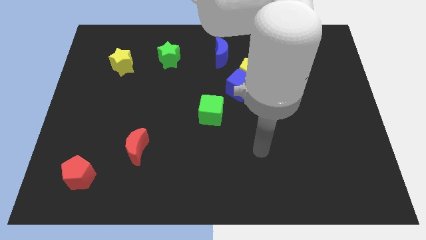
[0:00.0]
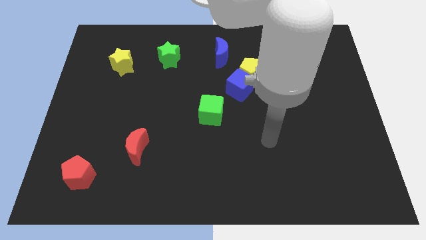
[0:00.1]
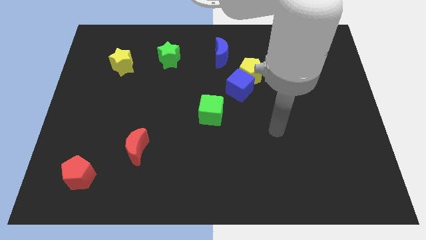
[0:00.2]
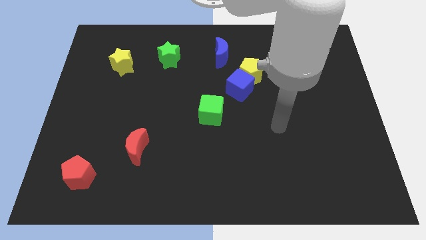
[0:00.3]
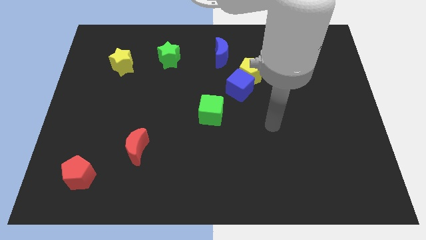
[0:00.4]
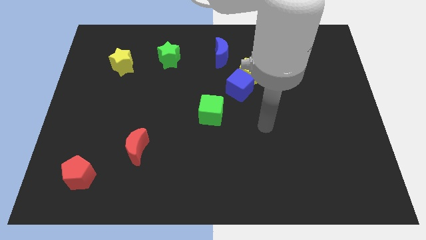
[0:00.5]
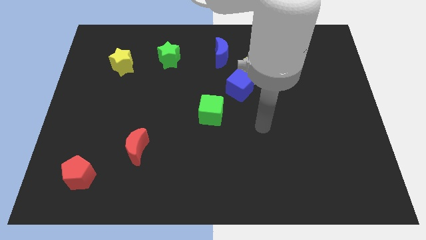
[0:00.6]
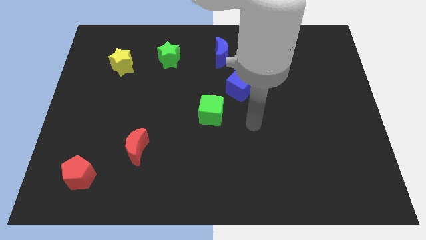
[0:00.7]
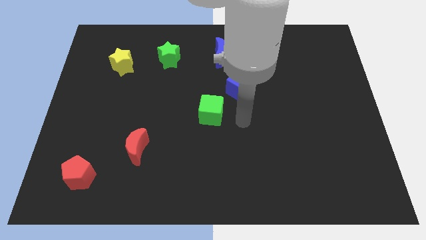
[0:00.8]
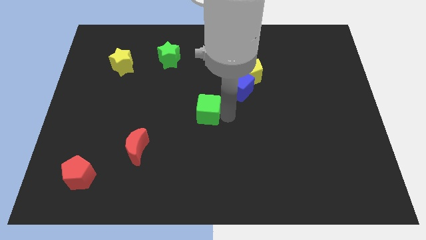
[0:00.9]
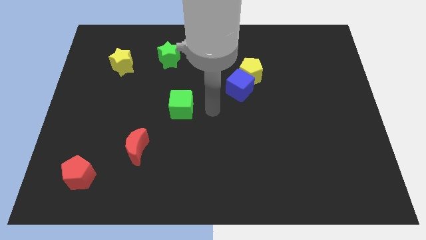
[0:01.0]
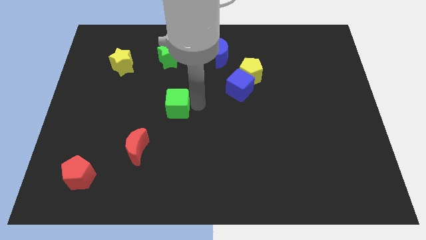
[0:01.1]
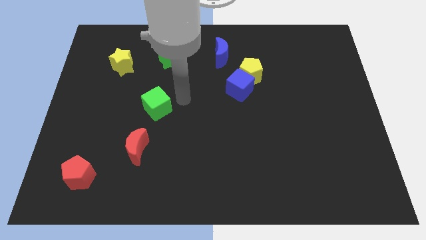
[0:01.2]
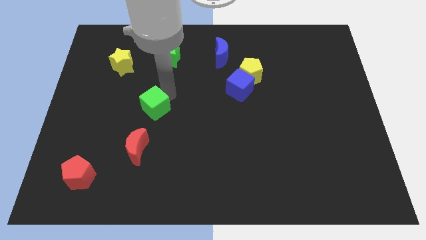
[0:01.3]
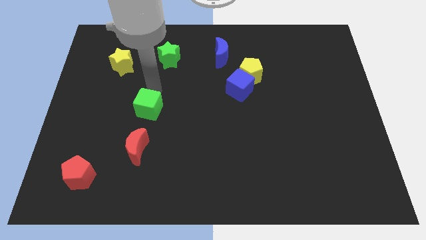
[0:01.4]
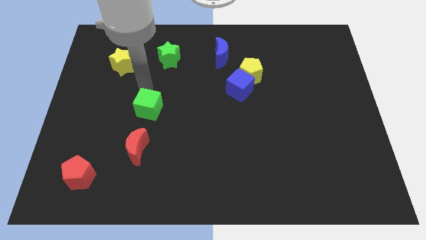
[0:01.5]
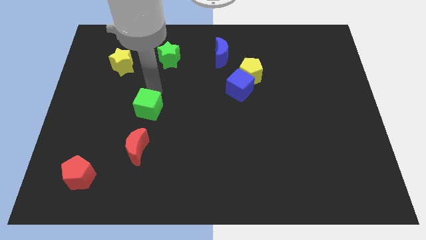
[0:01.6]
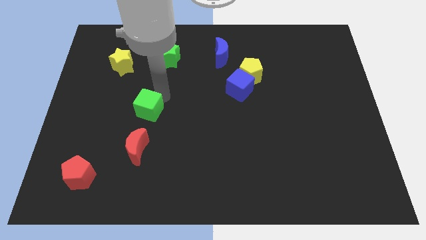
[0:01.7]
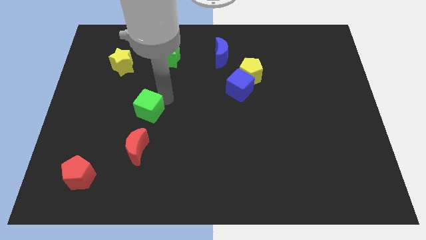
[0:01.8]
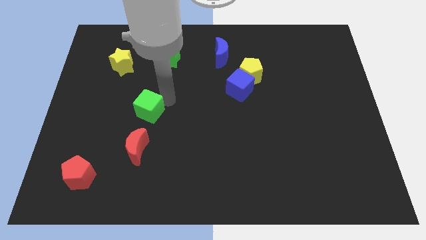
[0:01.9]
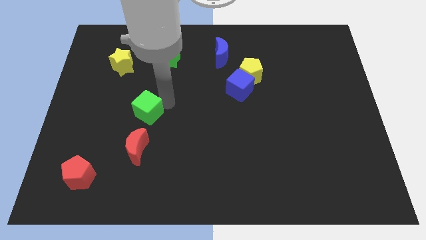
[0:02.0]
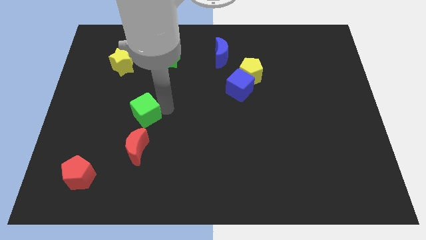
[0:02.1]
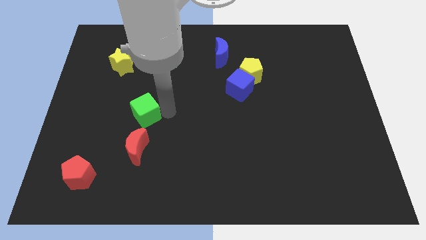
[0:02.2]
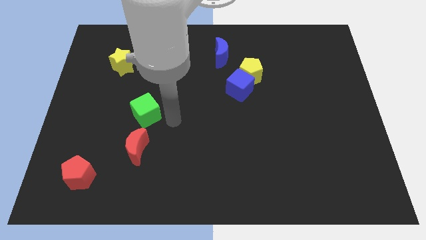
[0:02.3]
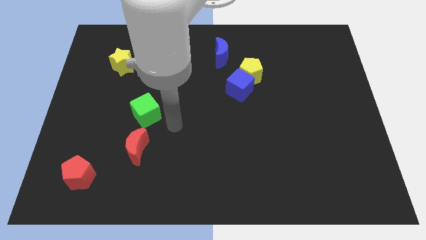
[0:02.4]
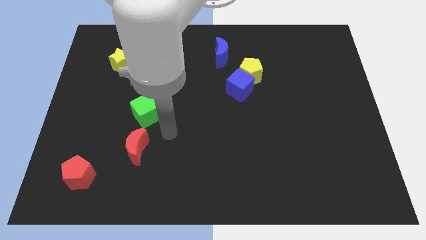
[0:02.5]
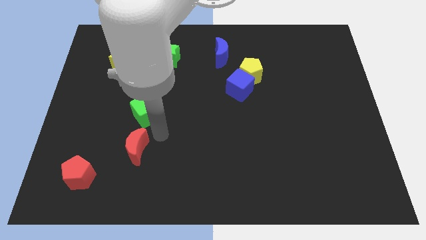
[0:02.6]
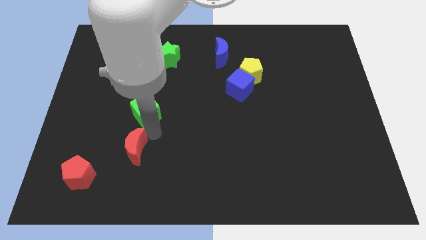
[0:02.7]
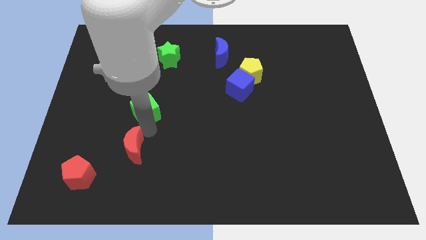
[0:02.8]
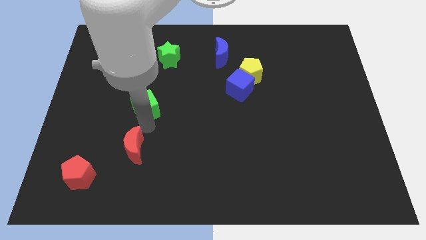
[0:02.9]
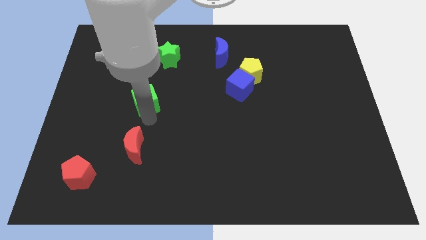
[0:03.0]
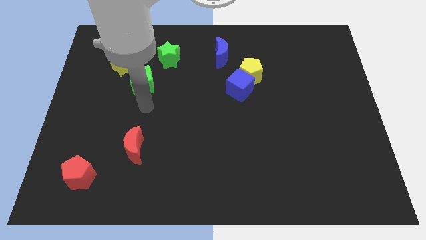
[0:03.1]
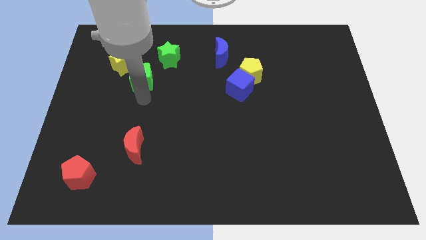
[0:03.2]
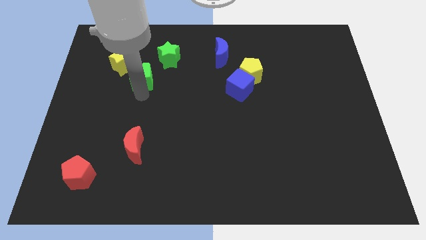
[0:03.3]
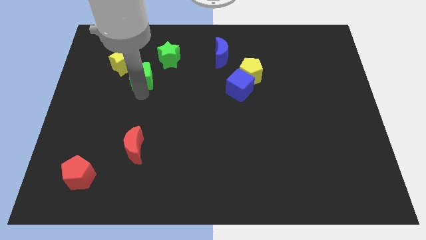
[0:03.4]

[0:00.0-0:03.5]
place the green cube below the yellow star

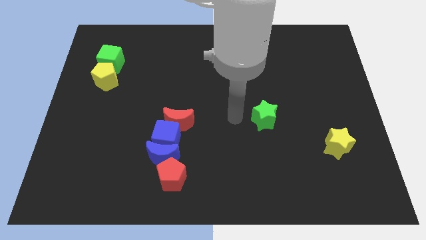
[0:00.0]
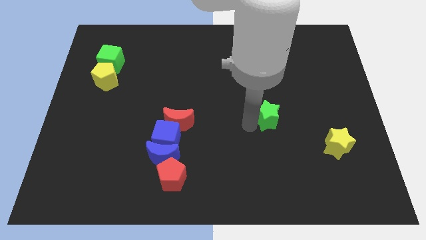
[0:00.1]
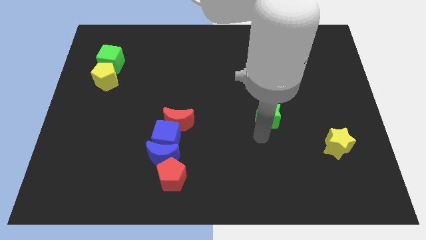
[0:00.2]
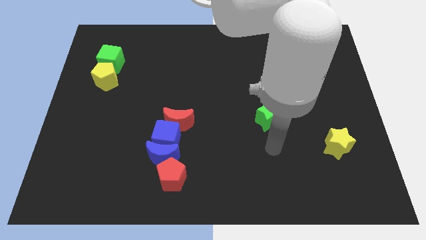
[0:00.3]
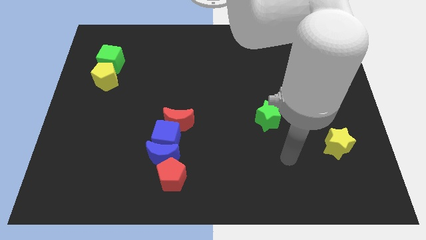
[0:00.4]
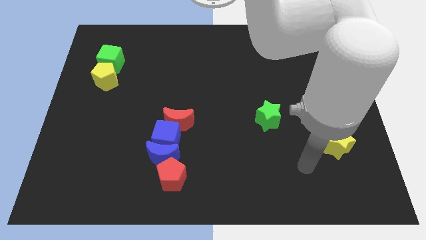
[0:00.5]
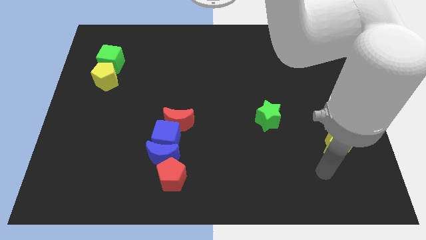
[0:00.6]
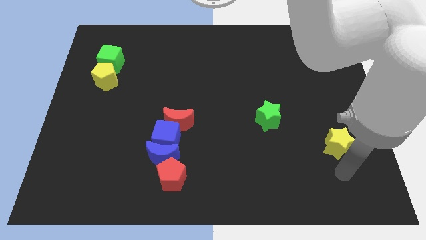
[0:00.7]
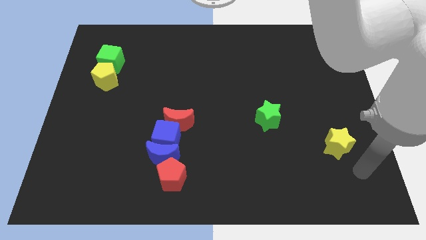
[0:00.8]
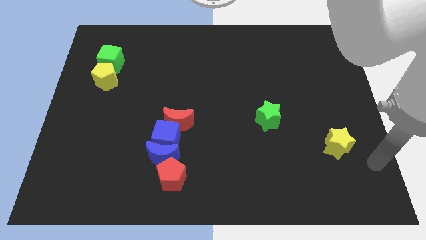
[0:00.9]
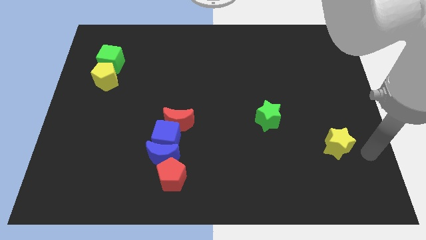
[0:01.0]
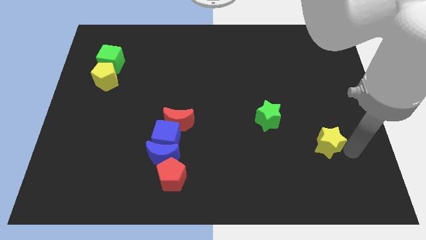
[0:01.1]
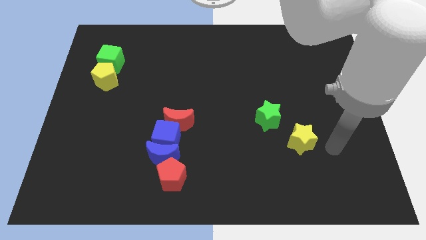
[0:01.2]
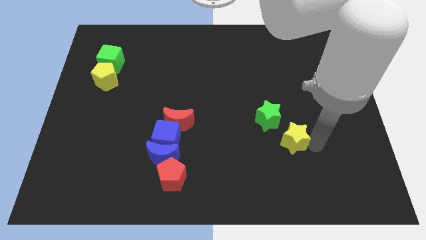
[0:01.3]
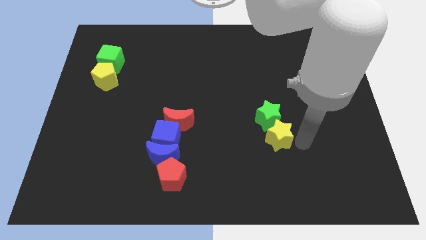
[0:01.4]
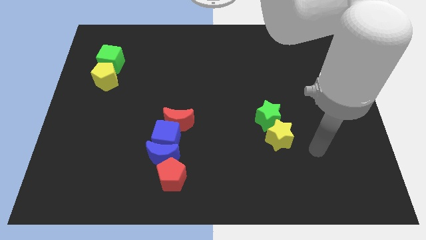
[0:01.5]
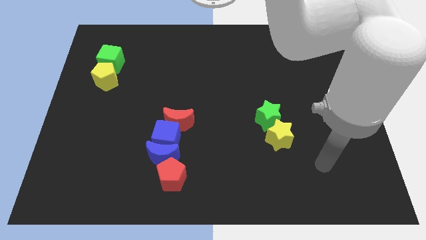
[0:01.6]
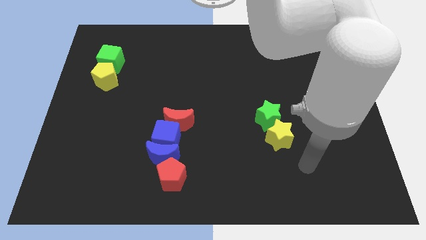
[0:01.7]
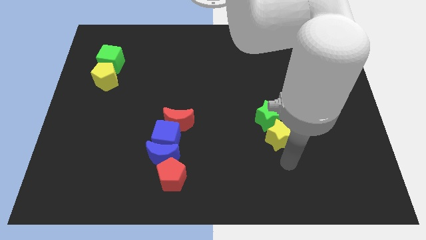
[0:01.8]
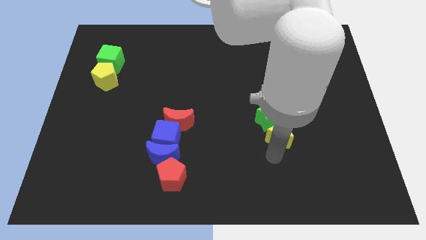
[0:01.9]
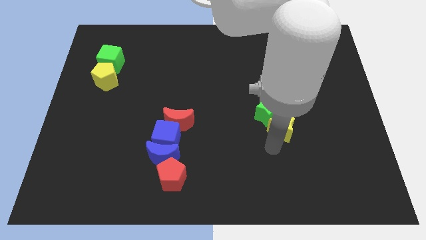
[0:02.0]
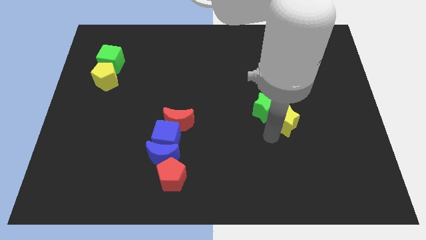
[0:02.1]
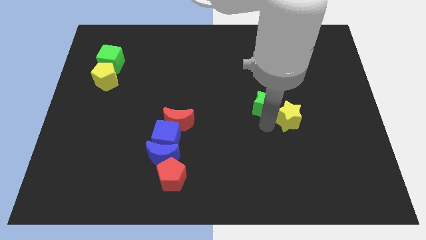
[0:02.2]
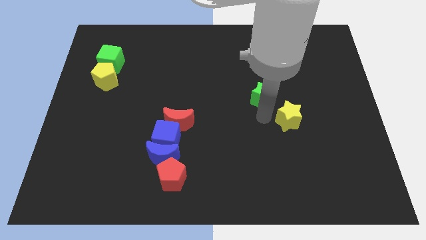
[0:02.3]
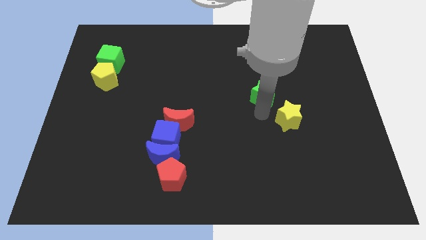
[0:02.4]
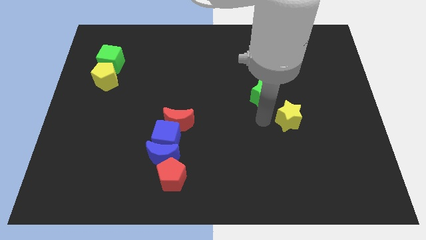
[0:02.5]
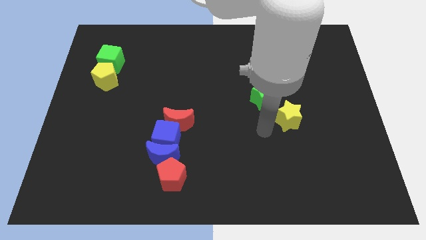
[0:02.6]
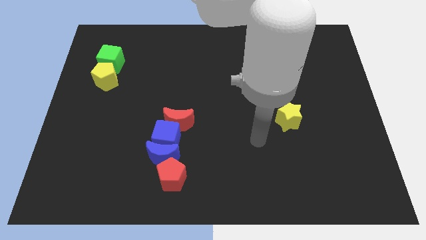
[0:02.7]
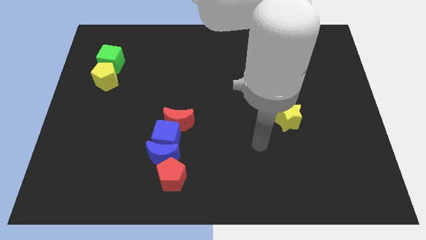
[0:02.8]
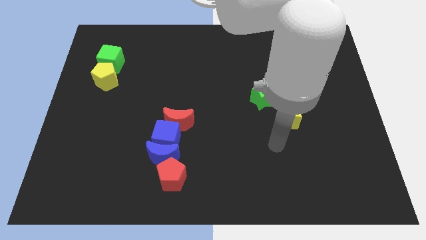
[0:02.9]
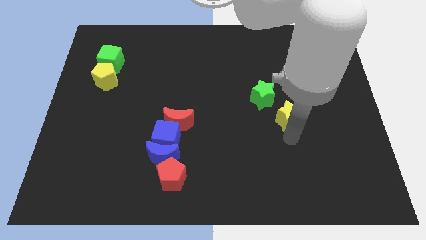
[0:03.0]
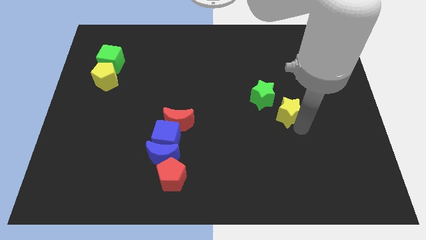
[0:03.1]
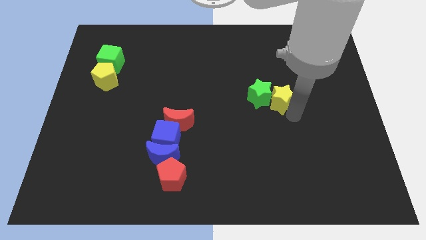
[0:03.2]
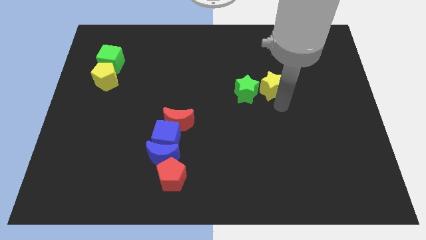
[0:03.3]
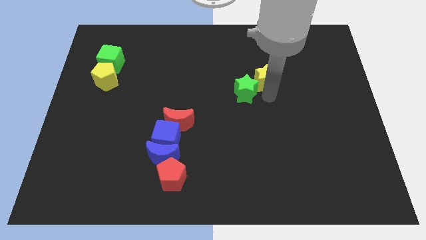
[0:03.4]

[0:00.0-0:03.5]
move the yellow star into the green star

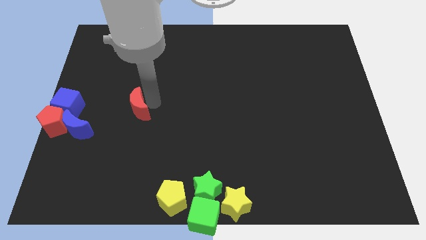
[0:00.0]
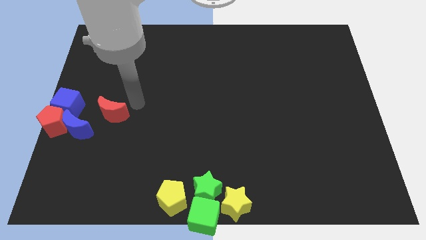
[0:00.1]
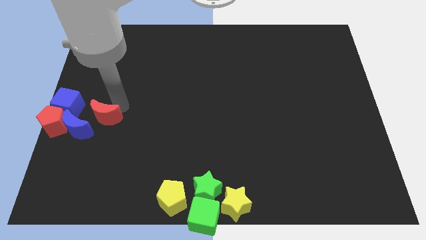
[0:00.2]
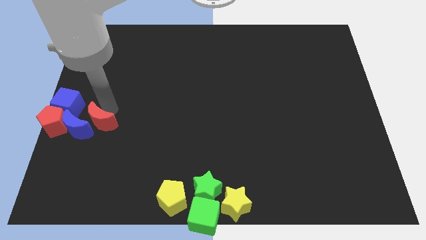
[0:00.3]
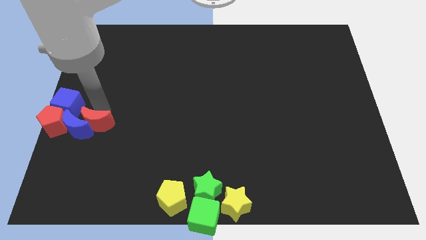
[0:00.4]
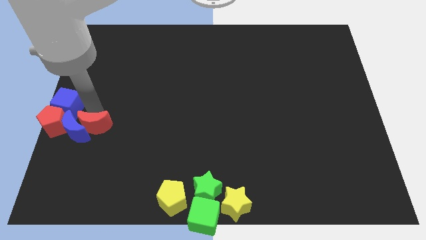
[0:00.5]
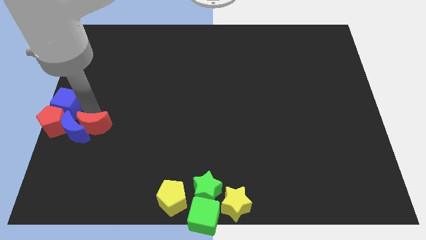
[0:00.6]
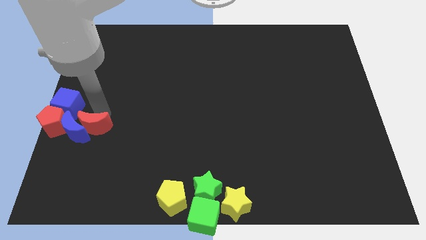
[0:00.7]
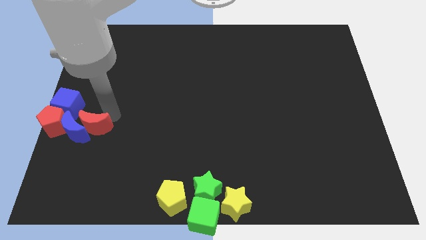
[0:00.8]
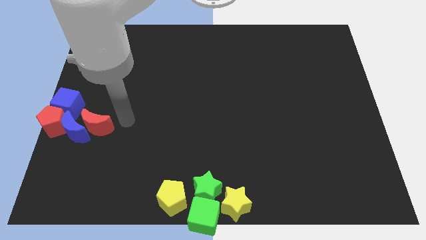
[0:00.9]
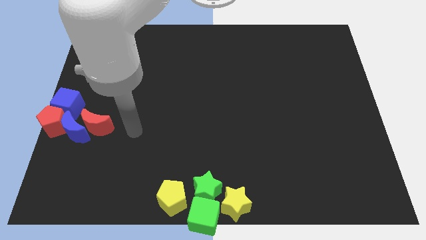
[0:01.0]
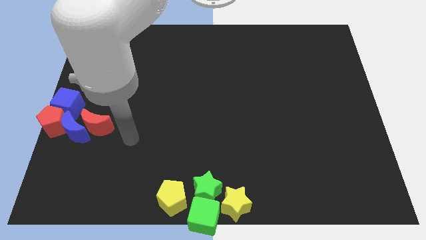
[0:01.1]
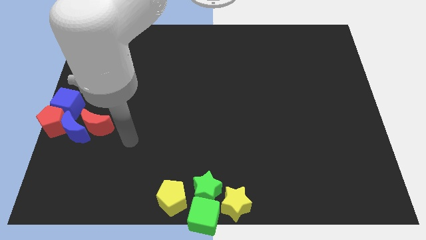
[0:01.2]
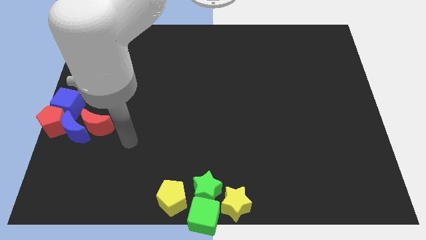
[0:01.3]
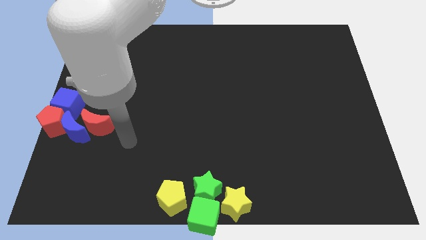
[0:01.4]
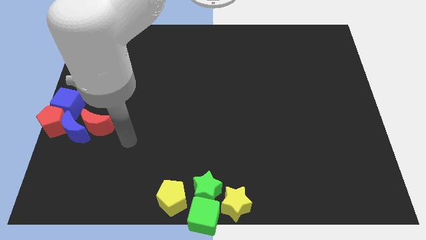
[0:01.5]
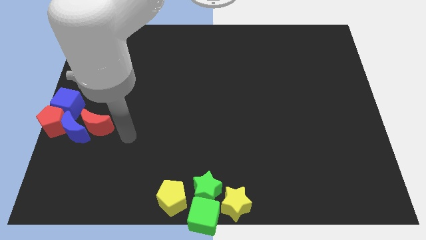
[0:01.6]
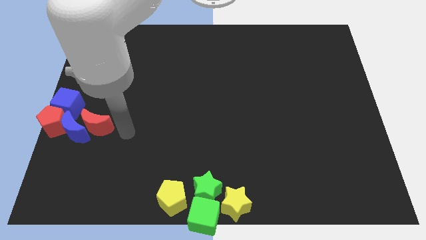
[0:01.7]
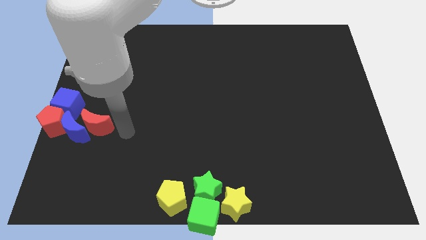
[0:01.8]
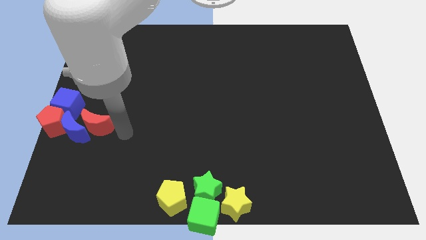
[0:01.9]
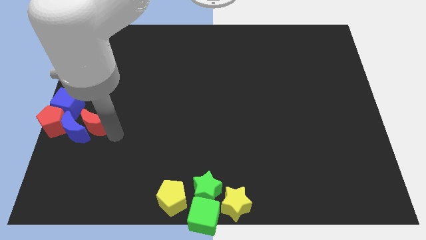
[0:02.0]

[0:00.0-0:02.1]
drag the red crescent into the blue crescent
